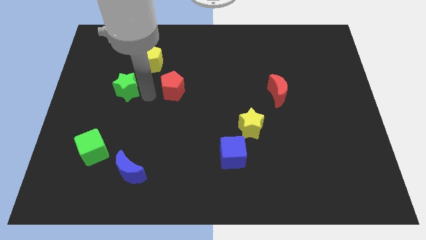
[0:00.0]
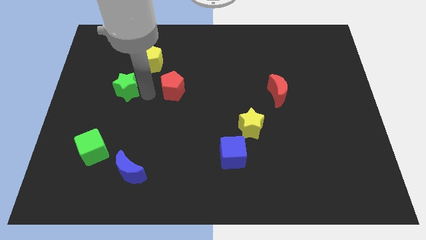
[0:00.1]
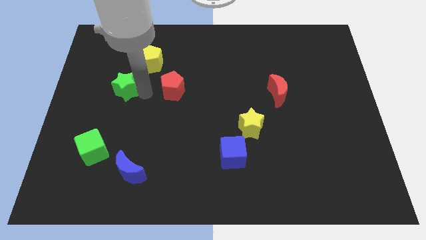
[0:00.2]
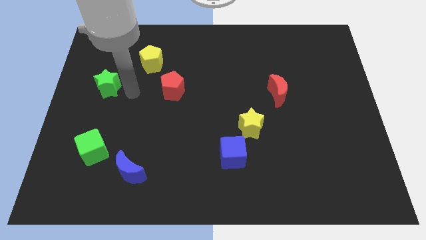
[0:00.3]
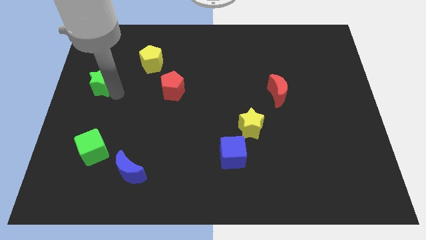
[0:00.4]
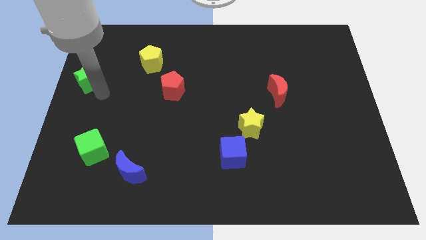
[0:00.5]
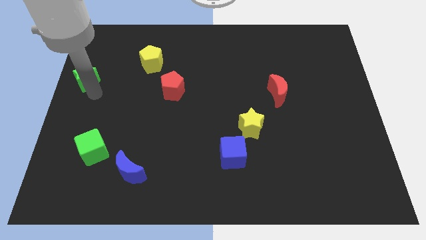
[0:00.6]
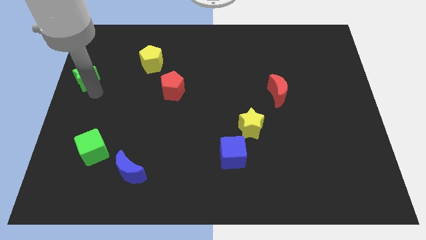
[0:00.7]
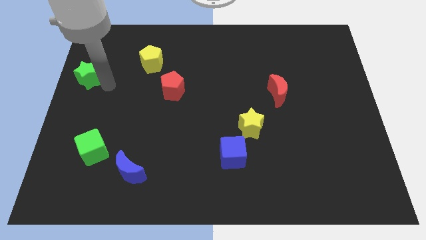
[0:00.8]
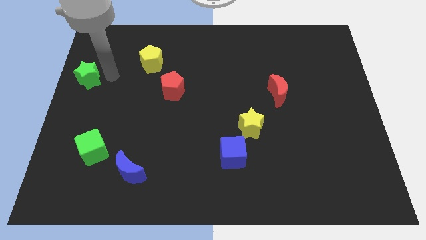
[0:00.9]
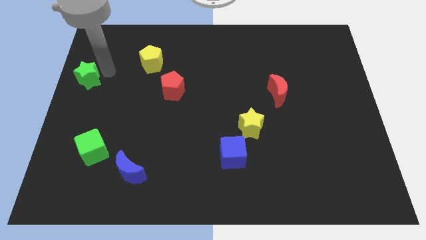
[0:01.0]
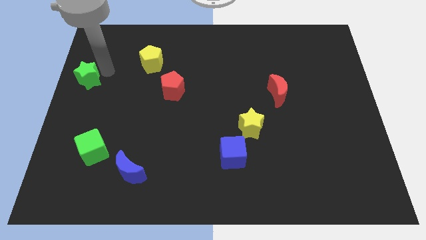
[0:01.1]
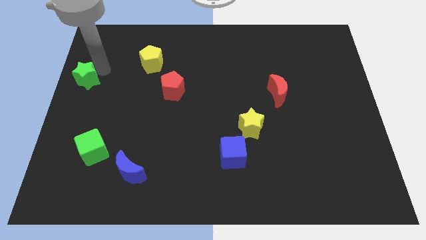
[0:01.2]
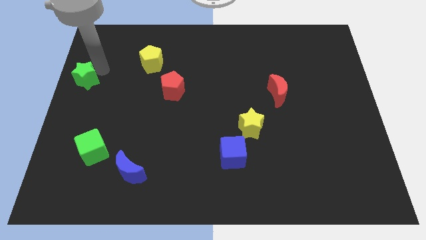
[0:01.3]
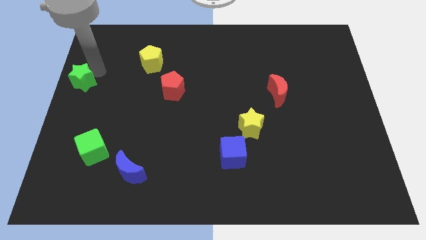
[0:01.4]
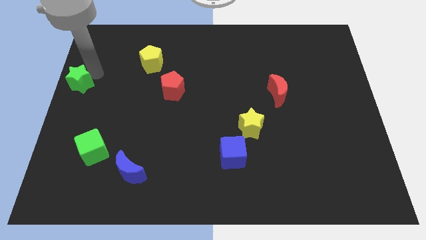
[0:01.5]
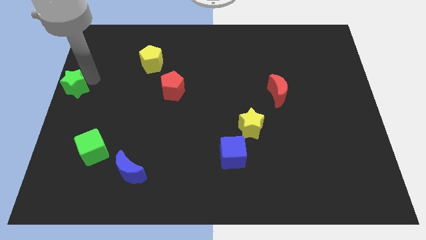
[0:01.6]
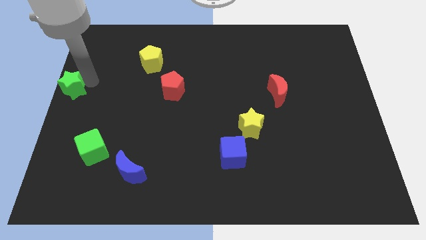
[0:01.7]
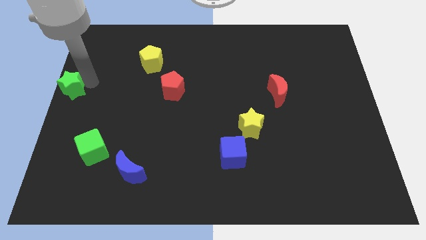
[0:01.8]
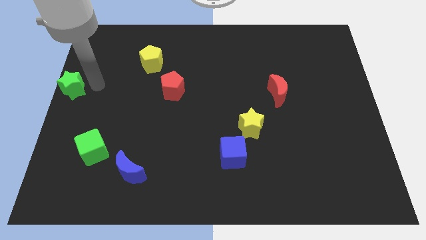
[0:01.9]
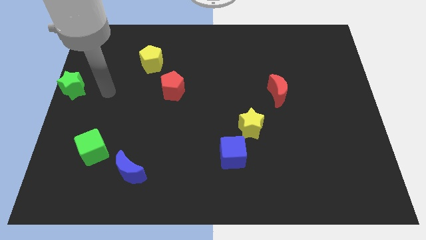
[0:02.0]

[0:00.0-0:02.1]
move the green star to the left of the board

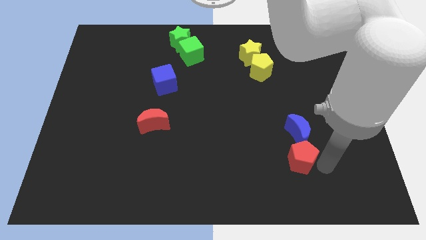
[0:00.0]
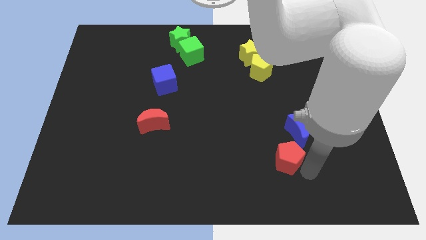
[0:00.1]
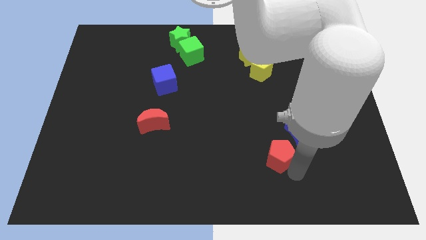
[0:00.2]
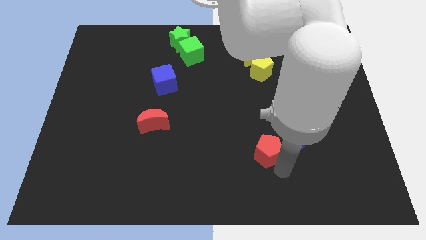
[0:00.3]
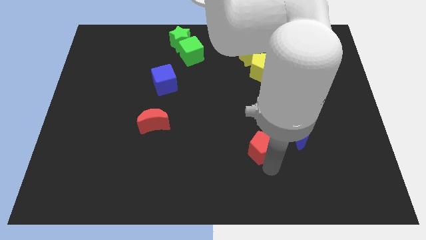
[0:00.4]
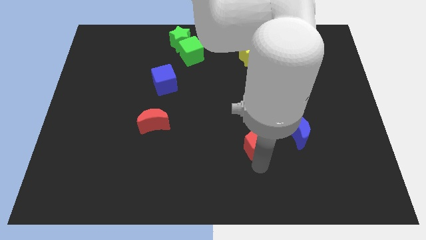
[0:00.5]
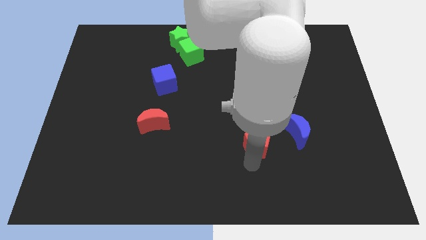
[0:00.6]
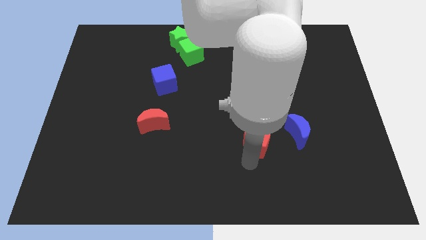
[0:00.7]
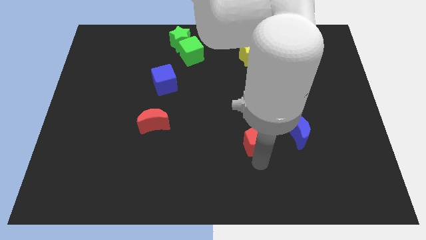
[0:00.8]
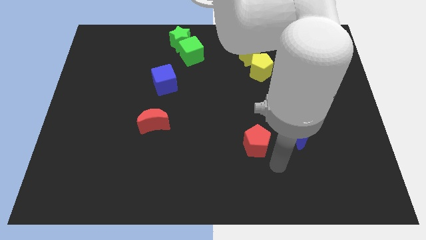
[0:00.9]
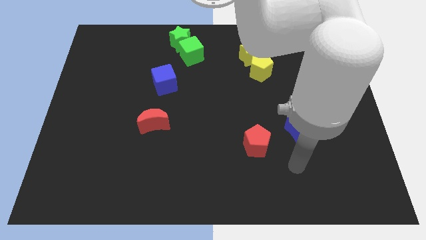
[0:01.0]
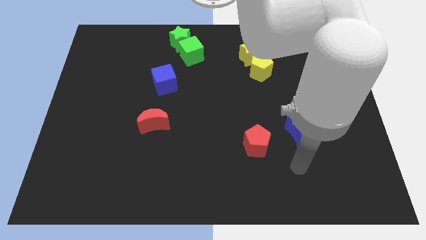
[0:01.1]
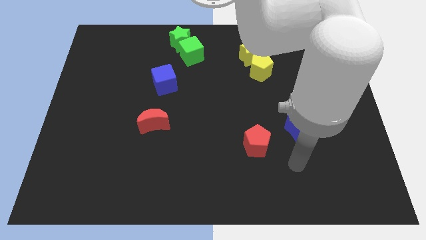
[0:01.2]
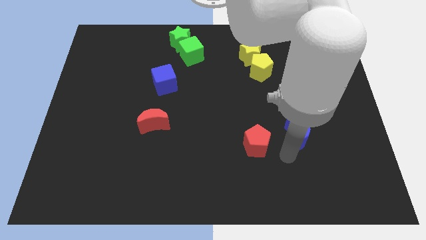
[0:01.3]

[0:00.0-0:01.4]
separate the red pentagon from the blue crescent

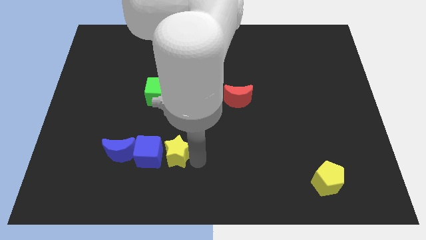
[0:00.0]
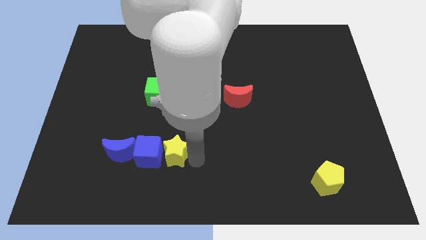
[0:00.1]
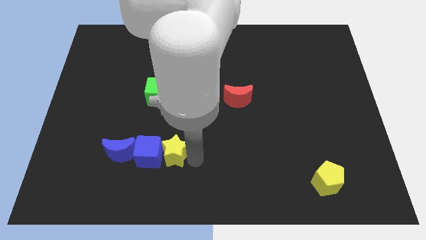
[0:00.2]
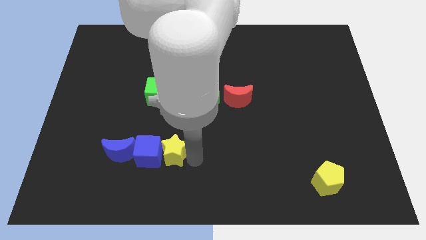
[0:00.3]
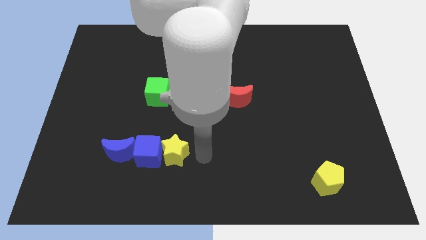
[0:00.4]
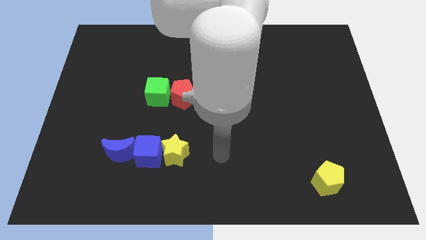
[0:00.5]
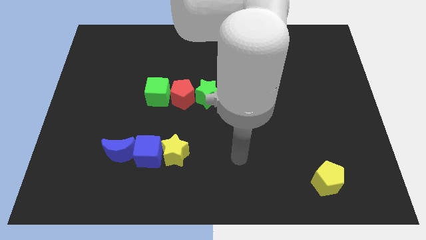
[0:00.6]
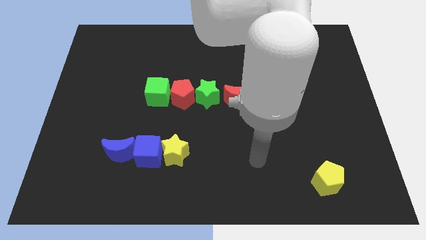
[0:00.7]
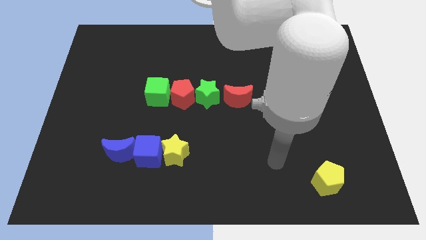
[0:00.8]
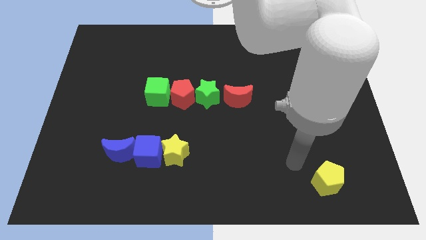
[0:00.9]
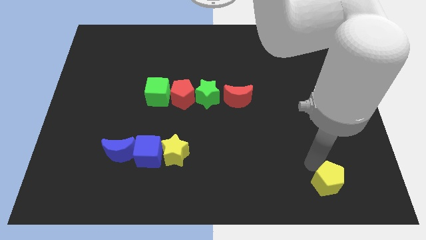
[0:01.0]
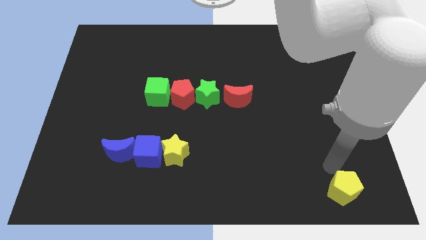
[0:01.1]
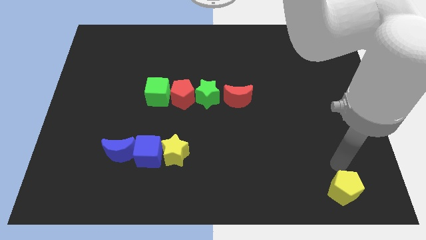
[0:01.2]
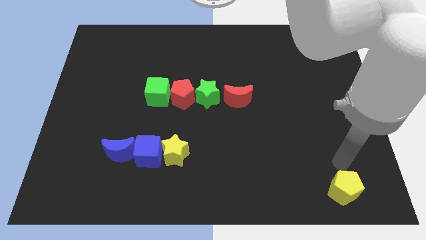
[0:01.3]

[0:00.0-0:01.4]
move your arm away from the yellow star

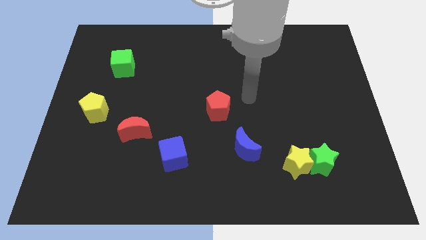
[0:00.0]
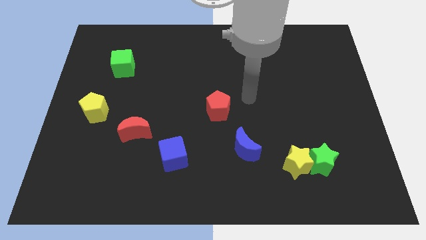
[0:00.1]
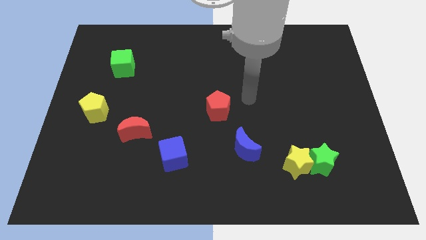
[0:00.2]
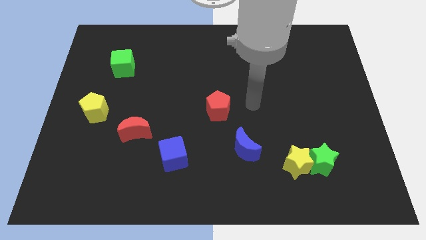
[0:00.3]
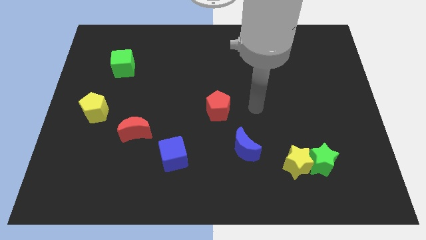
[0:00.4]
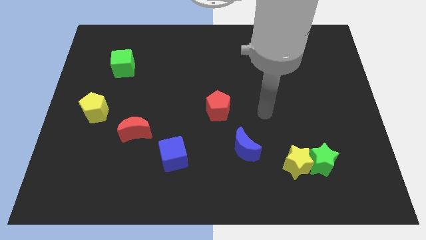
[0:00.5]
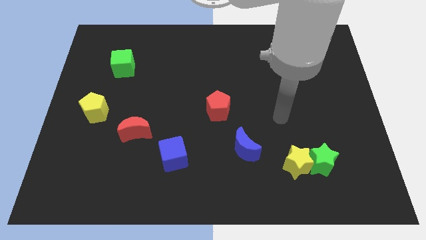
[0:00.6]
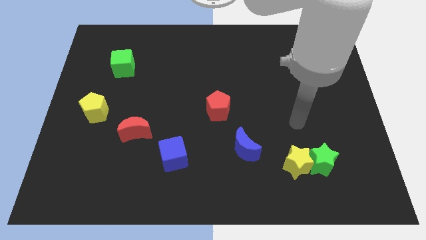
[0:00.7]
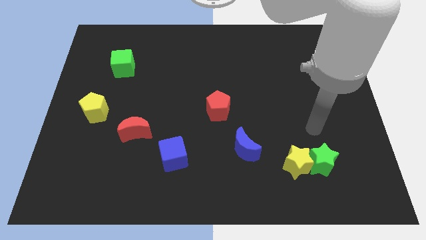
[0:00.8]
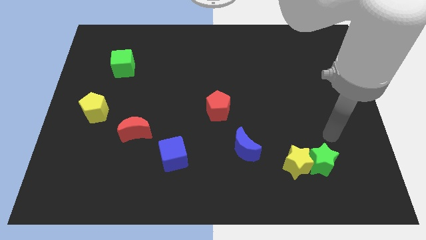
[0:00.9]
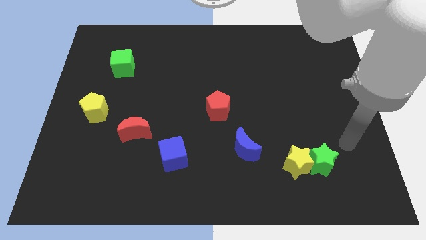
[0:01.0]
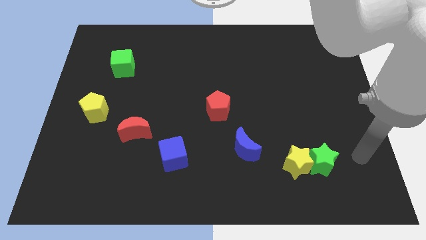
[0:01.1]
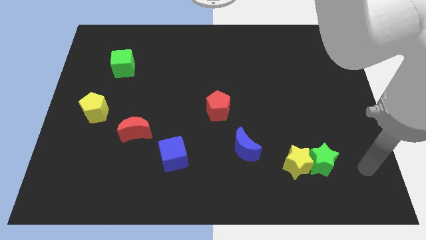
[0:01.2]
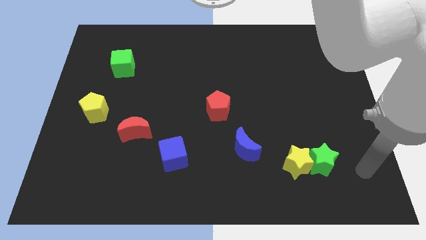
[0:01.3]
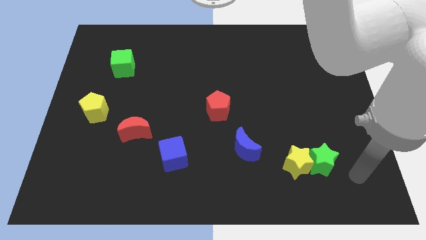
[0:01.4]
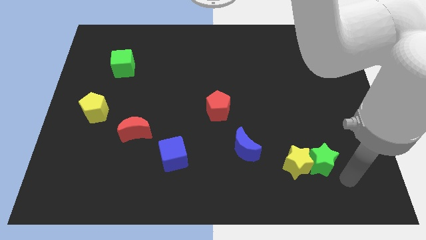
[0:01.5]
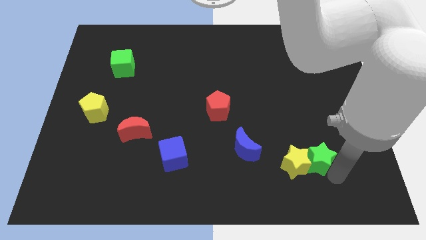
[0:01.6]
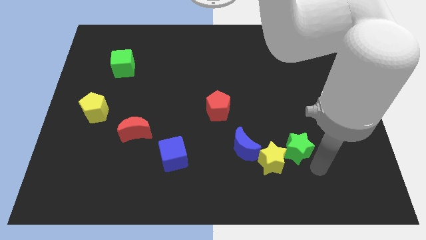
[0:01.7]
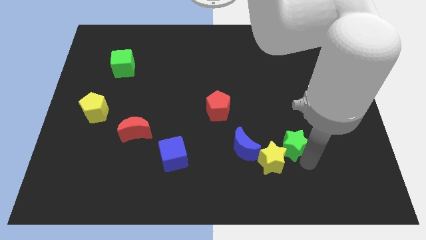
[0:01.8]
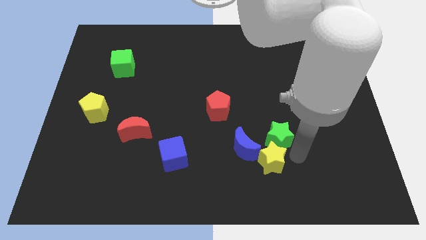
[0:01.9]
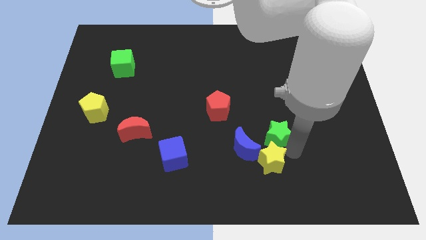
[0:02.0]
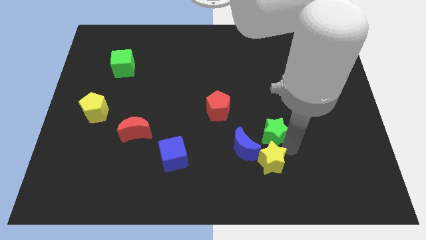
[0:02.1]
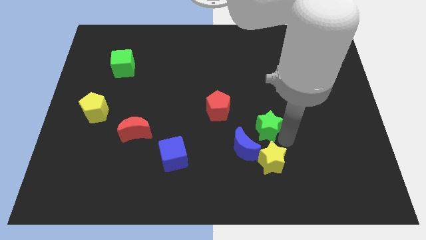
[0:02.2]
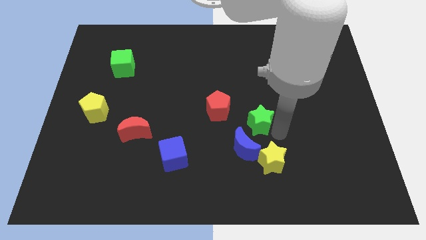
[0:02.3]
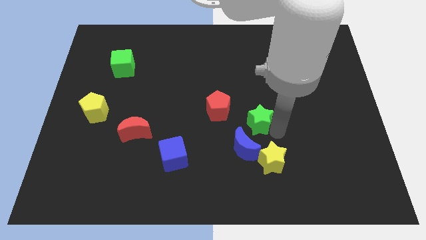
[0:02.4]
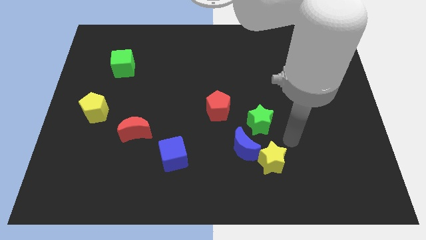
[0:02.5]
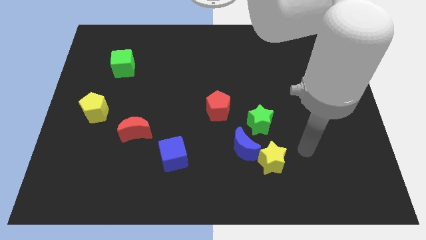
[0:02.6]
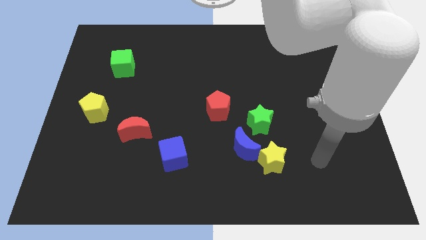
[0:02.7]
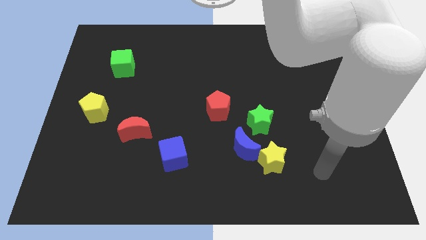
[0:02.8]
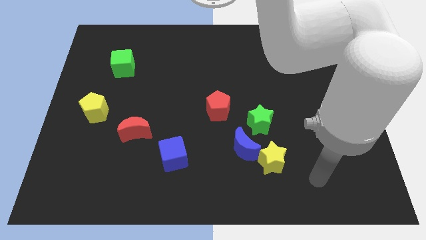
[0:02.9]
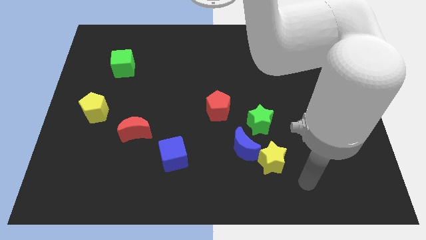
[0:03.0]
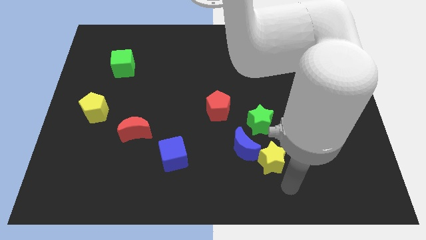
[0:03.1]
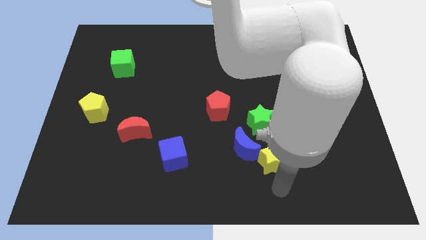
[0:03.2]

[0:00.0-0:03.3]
move the green star diagonally to the blue moon

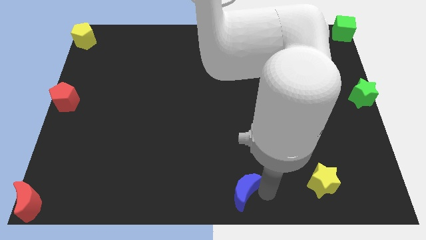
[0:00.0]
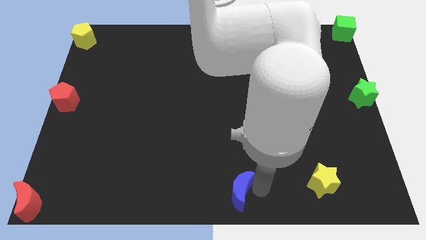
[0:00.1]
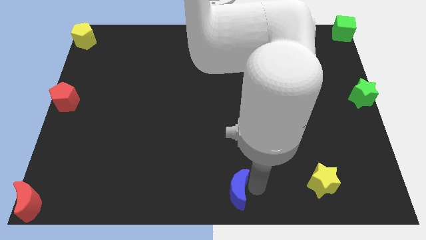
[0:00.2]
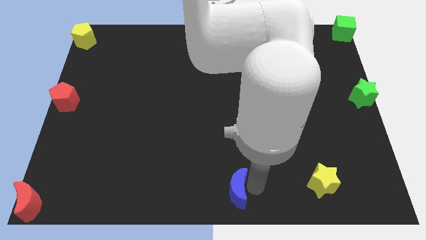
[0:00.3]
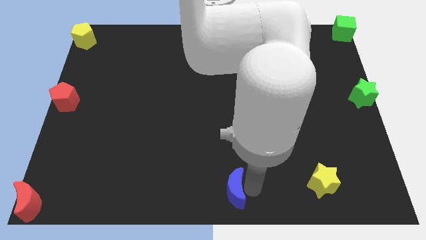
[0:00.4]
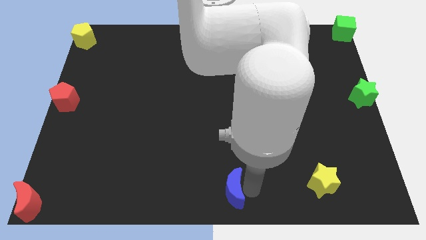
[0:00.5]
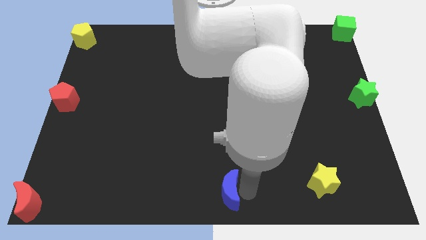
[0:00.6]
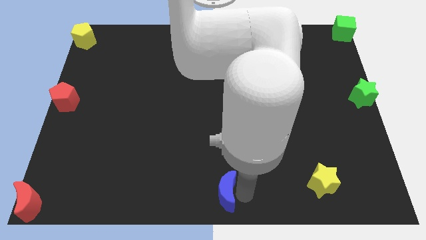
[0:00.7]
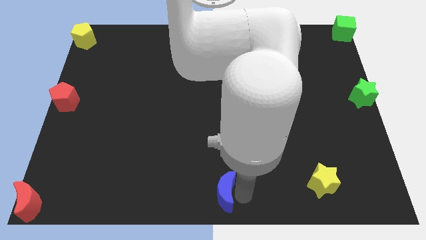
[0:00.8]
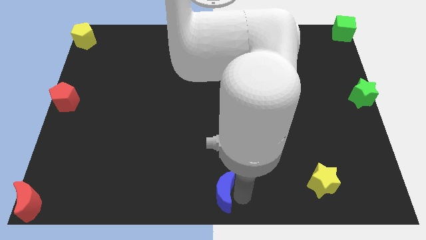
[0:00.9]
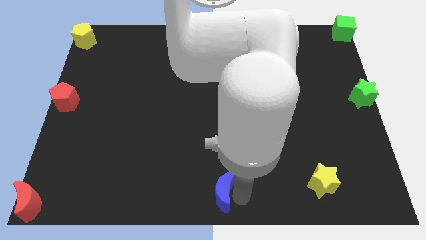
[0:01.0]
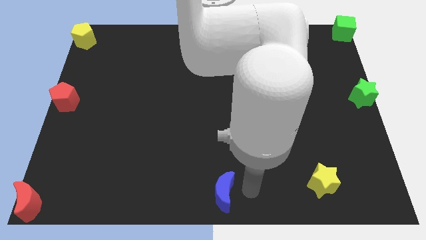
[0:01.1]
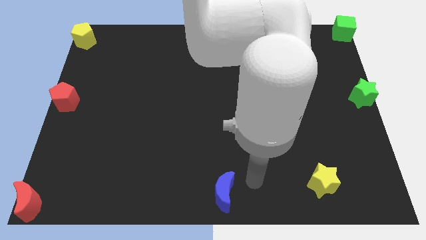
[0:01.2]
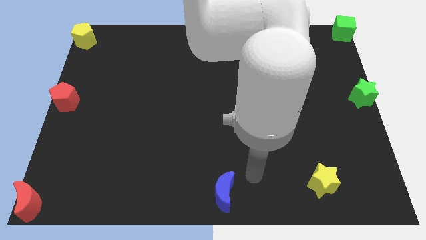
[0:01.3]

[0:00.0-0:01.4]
push blue crescent slightly to the left side
